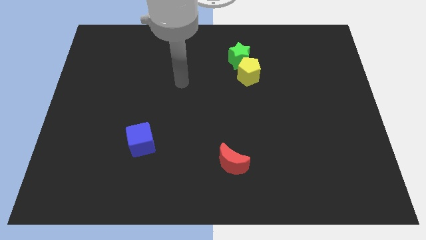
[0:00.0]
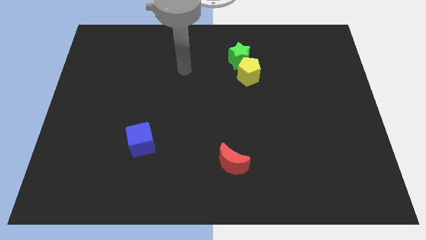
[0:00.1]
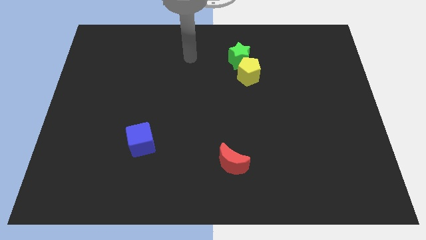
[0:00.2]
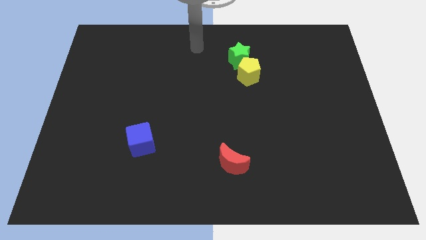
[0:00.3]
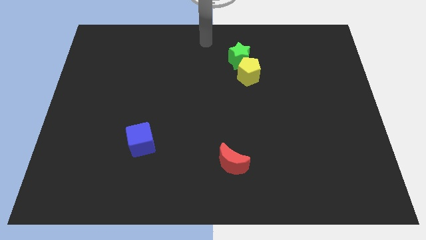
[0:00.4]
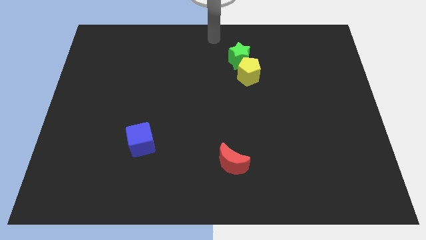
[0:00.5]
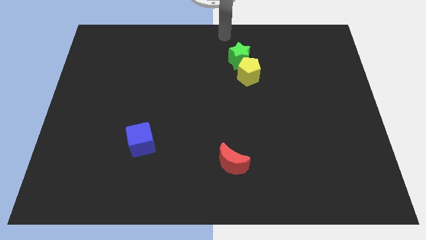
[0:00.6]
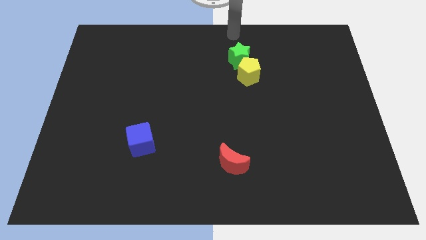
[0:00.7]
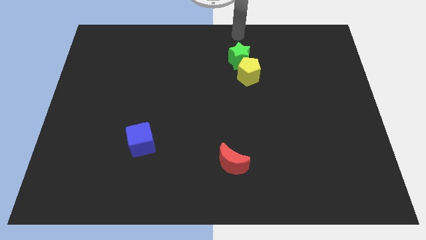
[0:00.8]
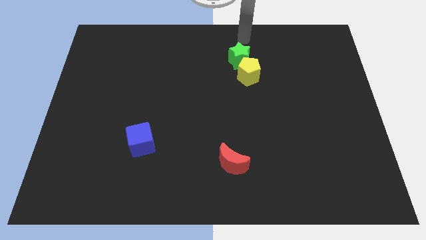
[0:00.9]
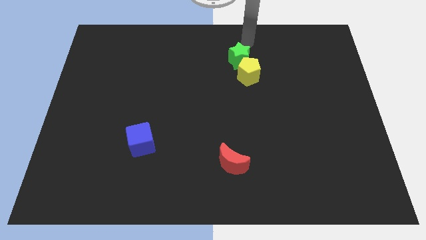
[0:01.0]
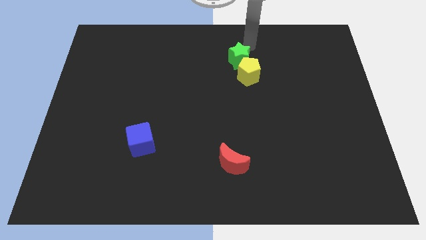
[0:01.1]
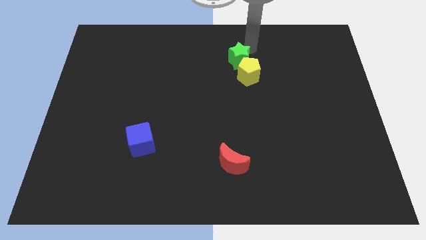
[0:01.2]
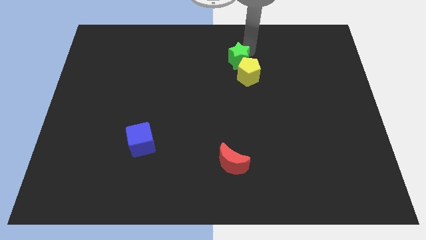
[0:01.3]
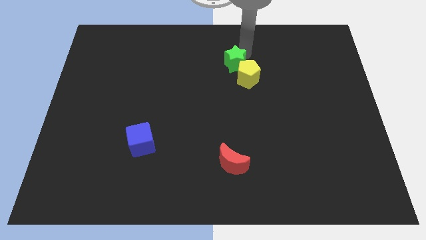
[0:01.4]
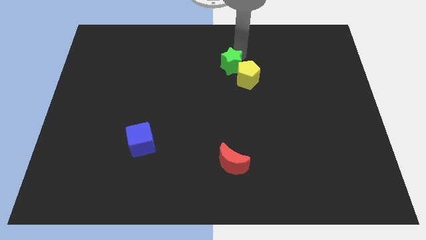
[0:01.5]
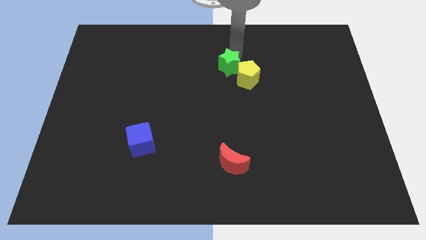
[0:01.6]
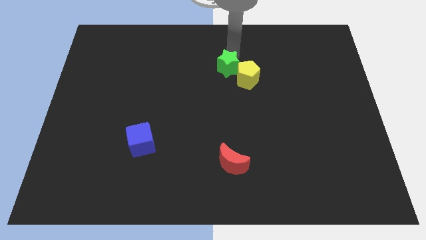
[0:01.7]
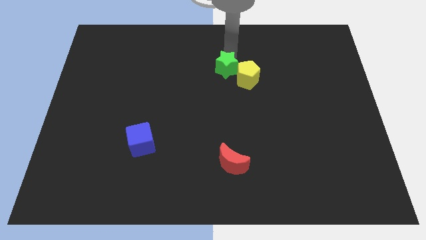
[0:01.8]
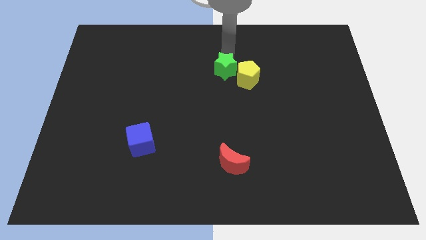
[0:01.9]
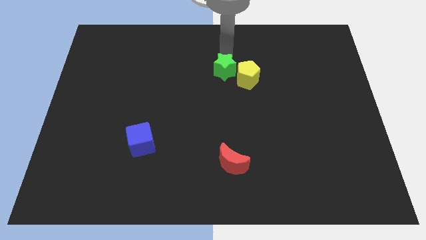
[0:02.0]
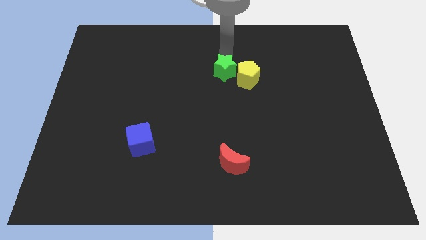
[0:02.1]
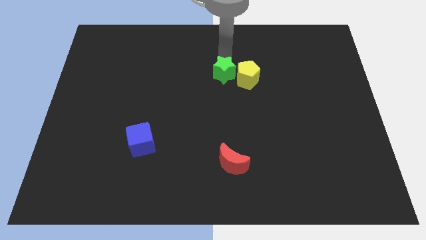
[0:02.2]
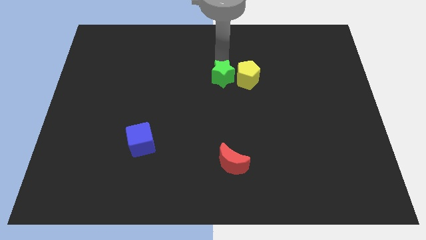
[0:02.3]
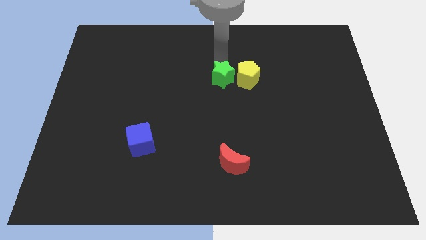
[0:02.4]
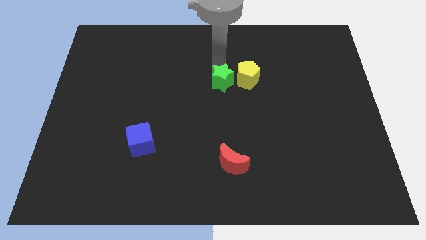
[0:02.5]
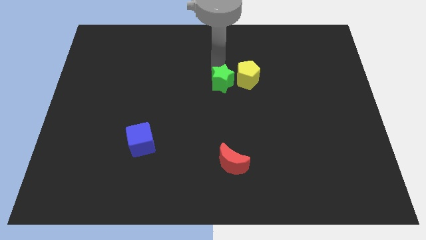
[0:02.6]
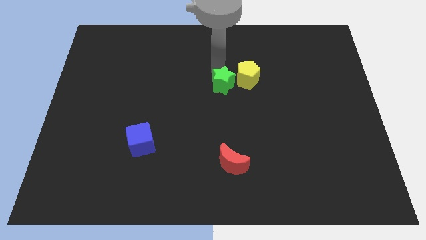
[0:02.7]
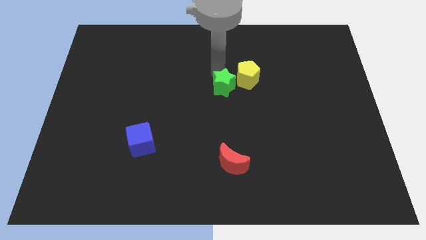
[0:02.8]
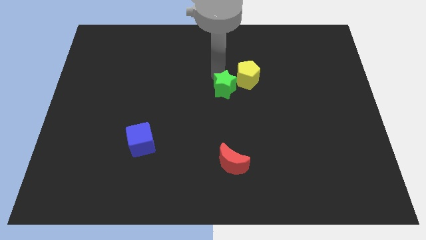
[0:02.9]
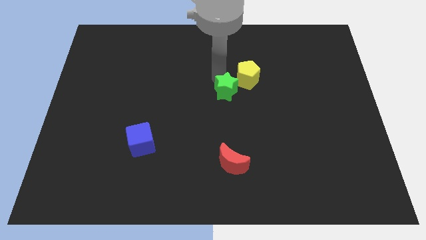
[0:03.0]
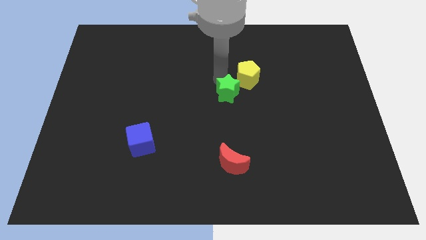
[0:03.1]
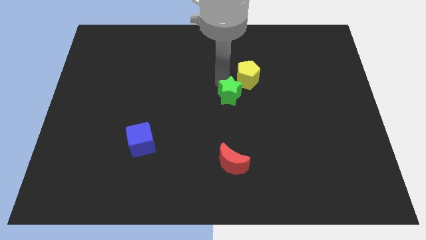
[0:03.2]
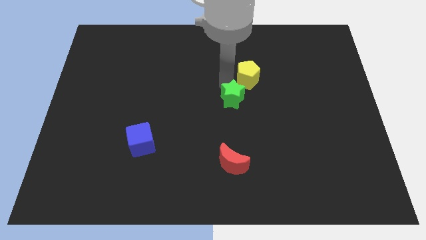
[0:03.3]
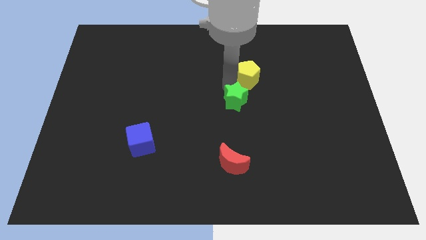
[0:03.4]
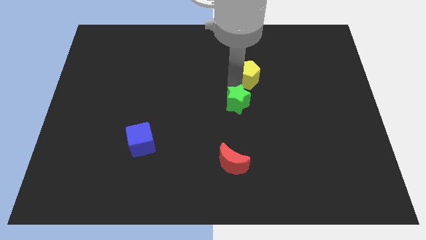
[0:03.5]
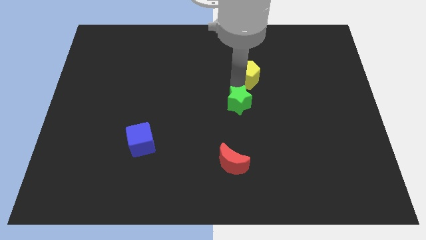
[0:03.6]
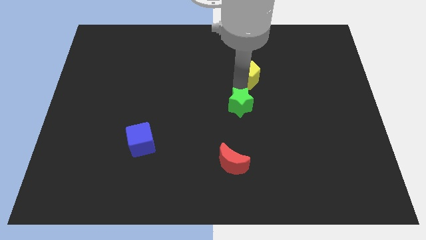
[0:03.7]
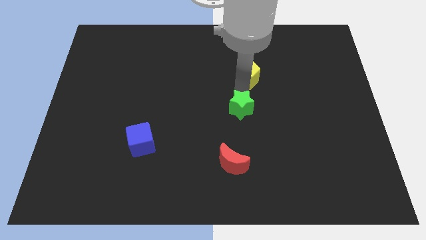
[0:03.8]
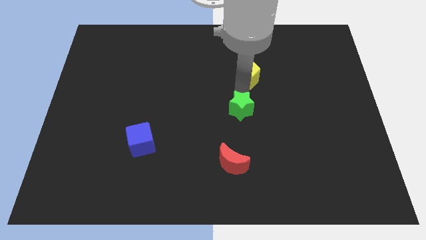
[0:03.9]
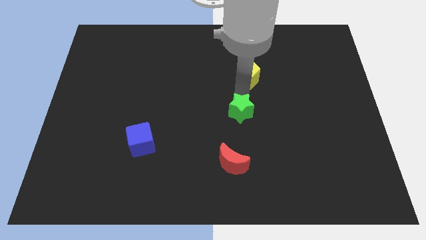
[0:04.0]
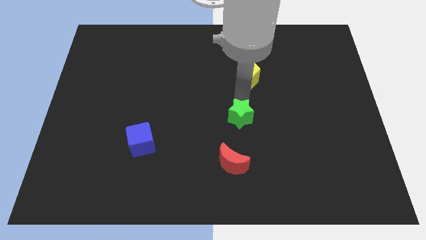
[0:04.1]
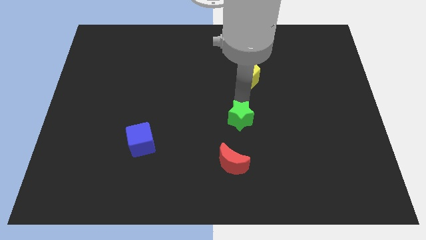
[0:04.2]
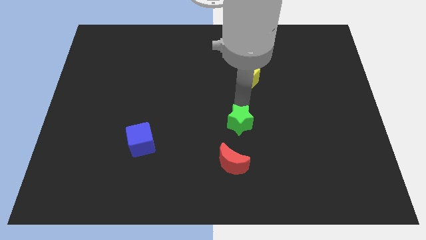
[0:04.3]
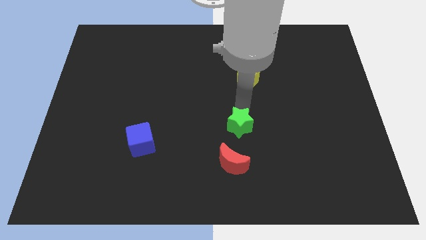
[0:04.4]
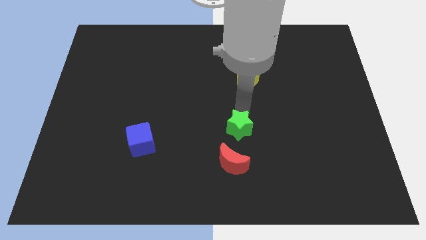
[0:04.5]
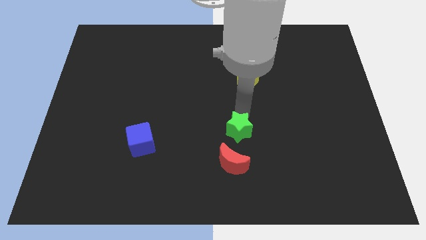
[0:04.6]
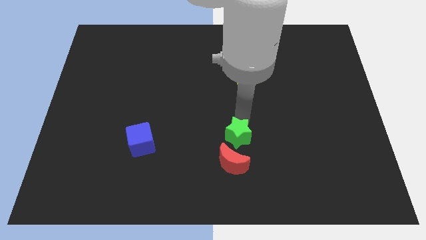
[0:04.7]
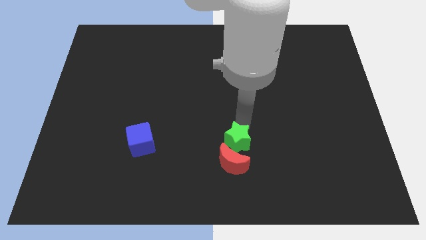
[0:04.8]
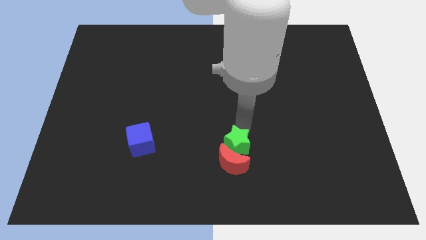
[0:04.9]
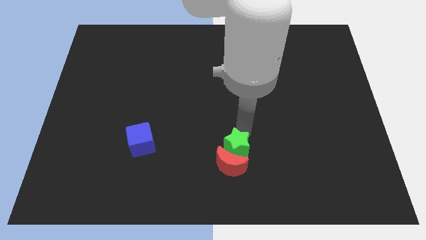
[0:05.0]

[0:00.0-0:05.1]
put the green block to the moon

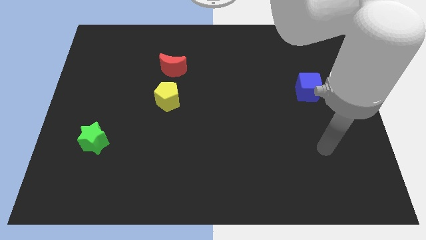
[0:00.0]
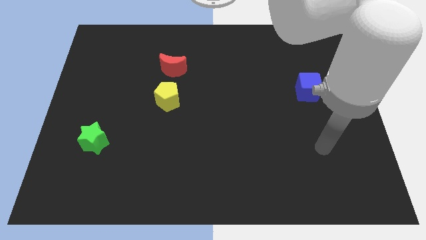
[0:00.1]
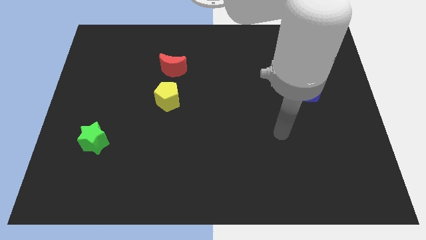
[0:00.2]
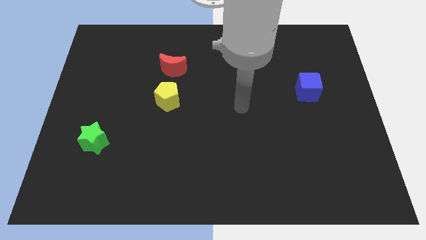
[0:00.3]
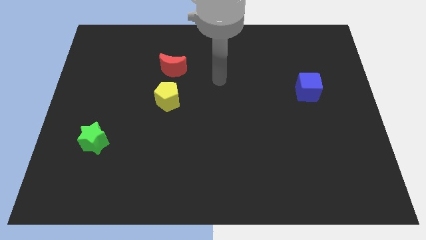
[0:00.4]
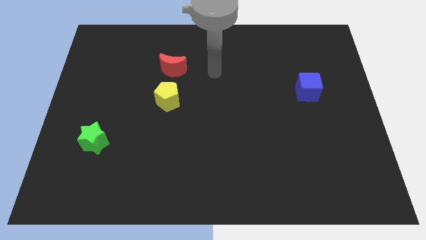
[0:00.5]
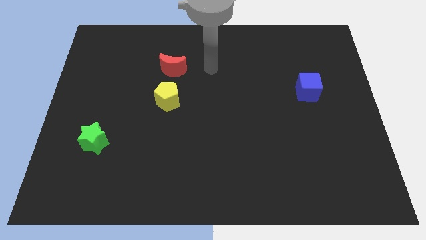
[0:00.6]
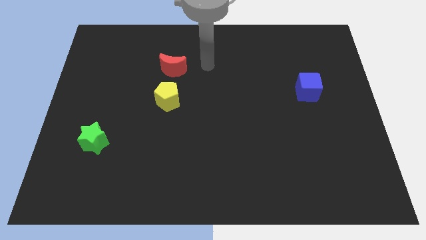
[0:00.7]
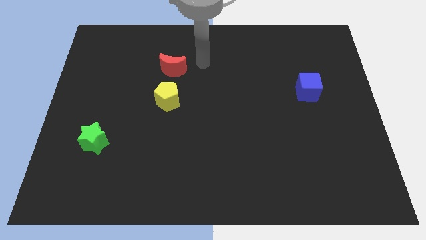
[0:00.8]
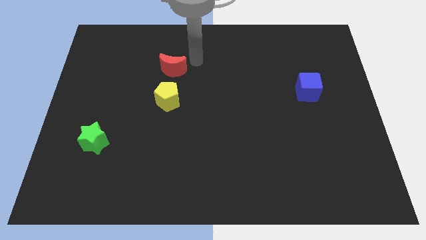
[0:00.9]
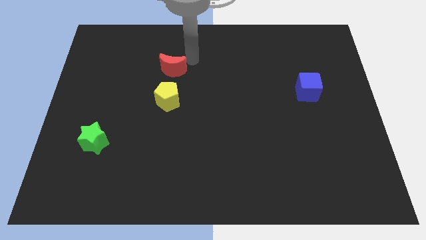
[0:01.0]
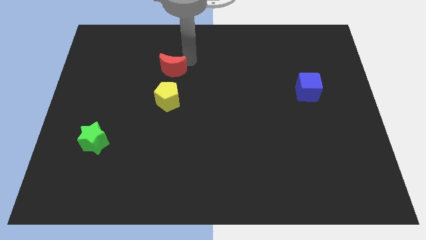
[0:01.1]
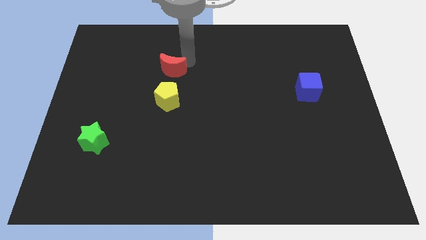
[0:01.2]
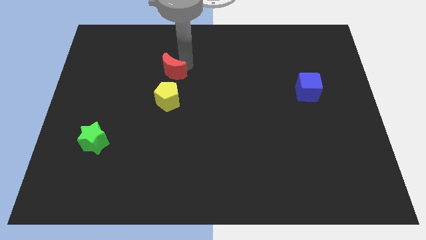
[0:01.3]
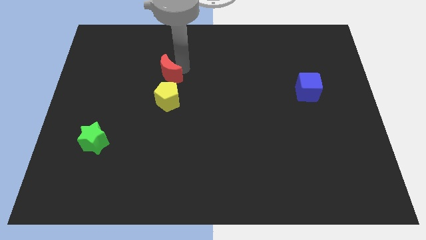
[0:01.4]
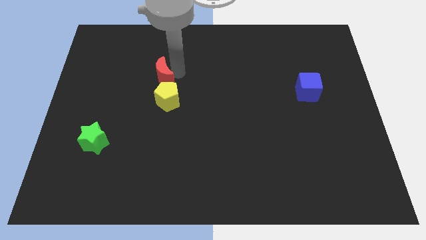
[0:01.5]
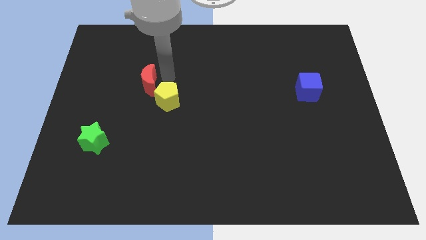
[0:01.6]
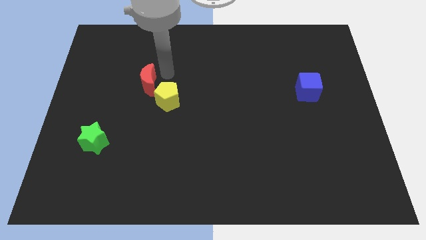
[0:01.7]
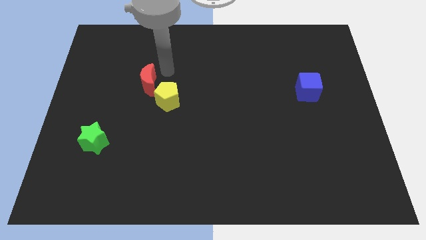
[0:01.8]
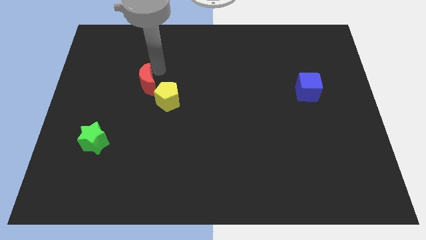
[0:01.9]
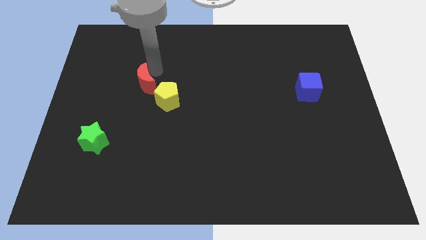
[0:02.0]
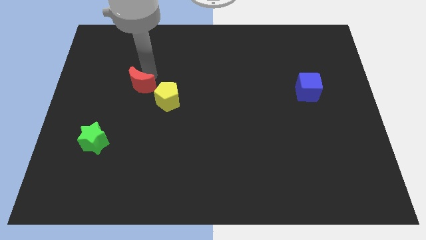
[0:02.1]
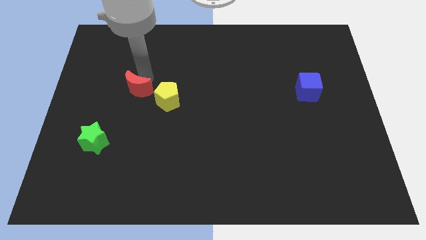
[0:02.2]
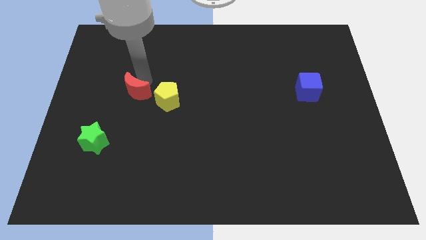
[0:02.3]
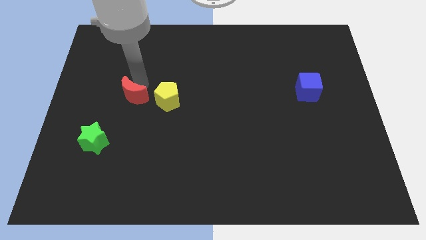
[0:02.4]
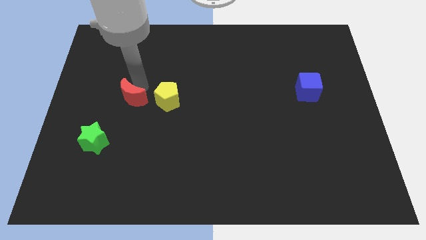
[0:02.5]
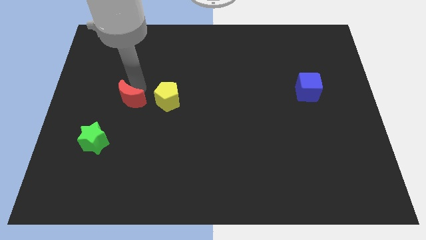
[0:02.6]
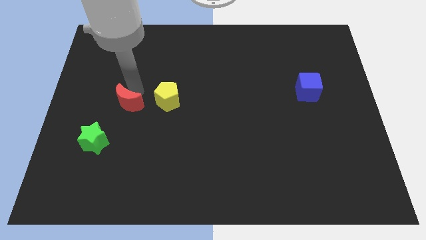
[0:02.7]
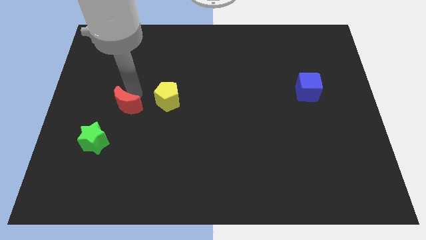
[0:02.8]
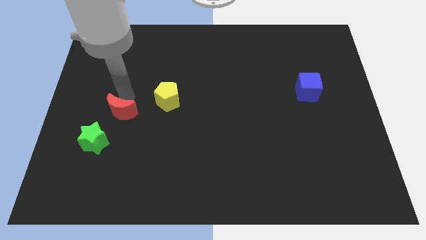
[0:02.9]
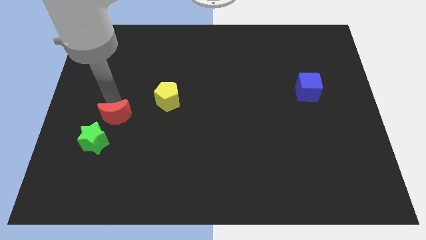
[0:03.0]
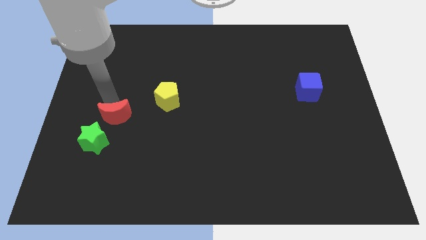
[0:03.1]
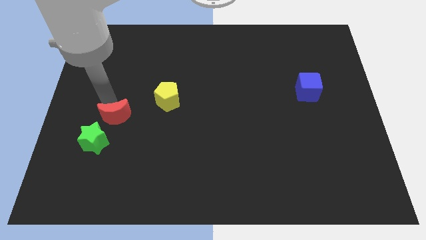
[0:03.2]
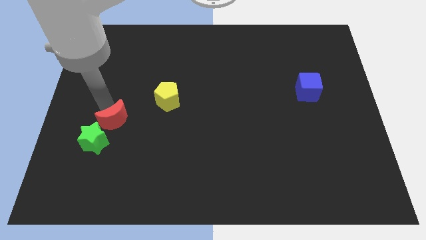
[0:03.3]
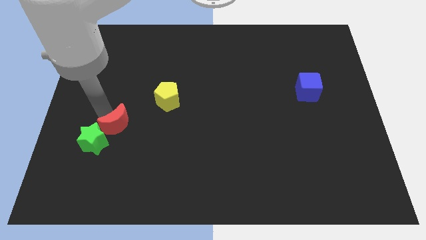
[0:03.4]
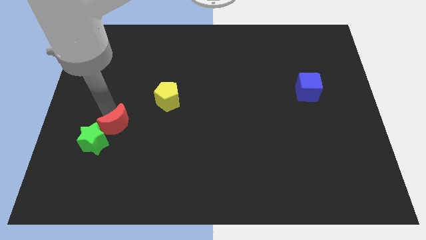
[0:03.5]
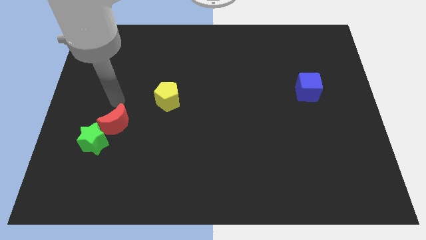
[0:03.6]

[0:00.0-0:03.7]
put the red moon close to the star
